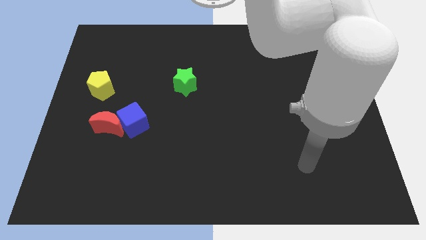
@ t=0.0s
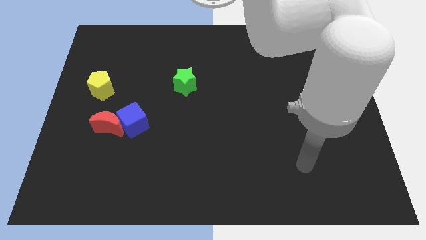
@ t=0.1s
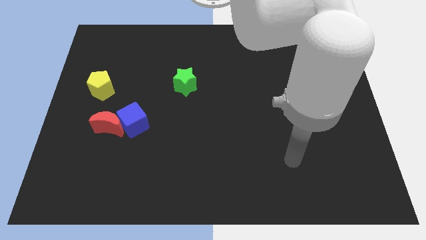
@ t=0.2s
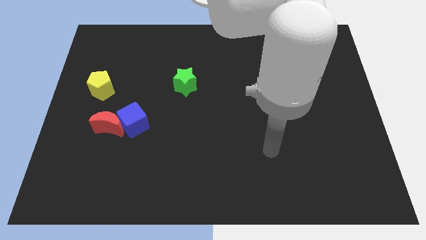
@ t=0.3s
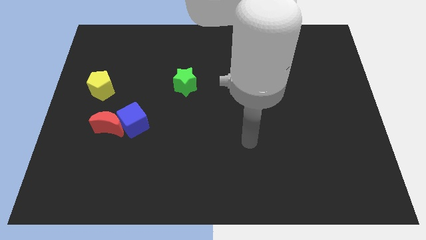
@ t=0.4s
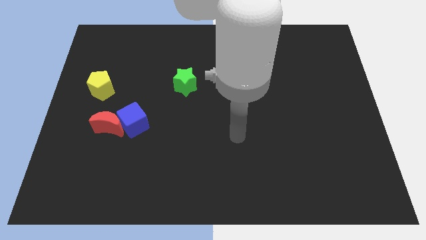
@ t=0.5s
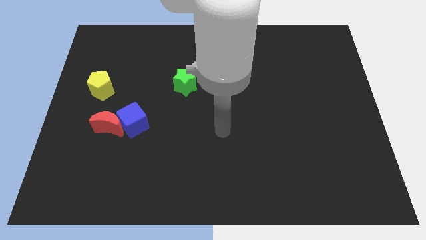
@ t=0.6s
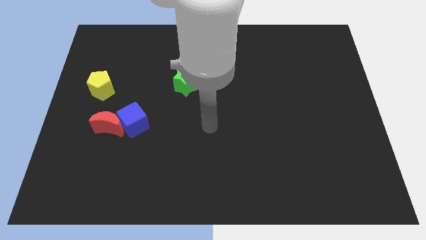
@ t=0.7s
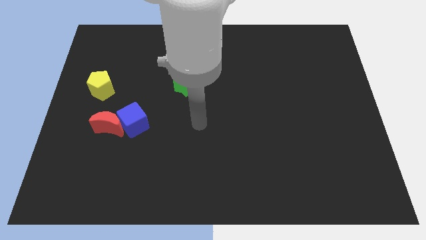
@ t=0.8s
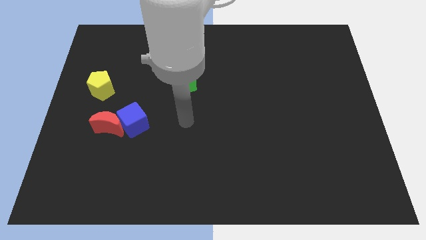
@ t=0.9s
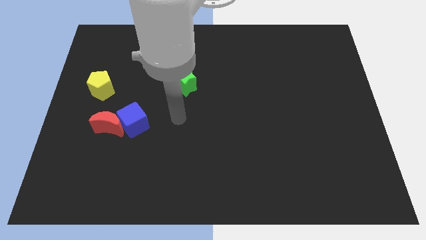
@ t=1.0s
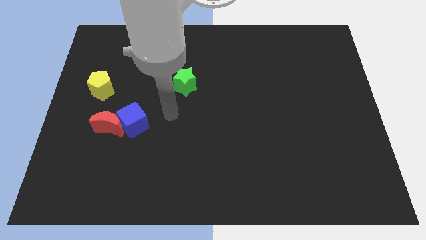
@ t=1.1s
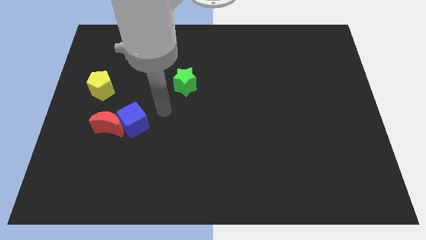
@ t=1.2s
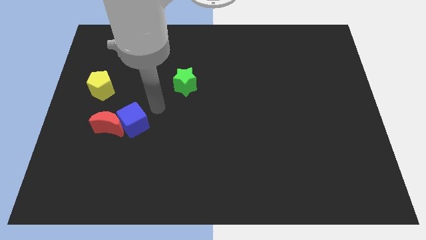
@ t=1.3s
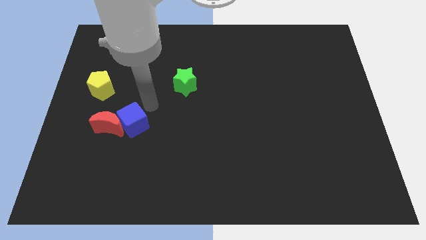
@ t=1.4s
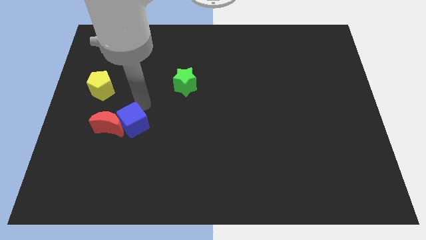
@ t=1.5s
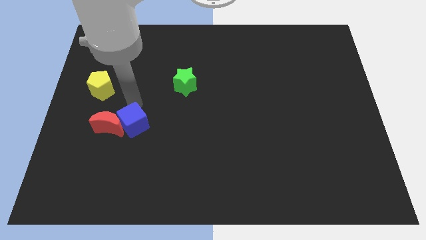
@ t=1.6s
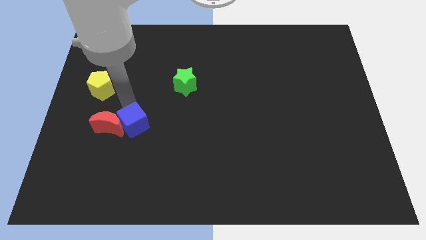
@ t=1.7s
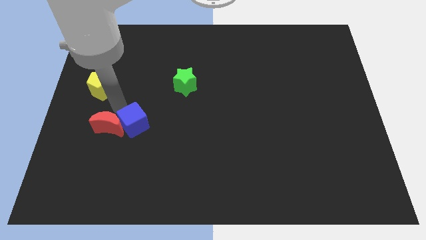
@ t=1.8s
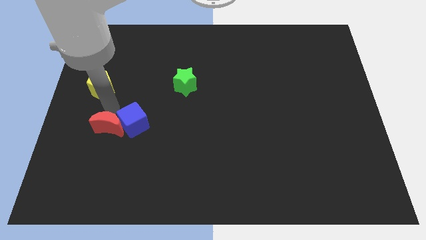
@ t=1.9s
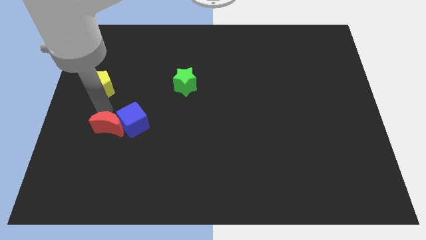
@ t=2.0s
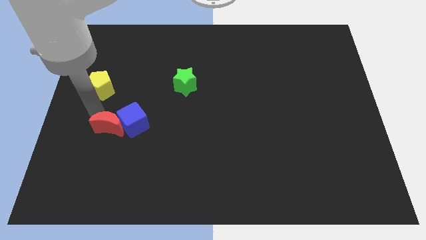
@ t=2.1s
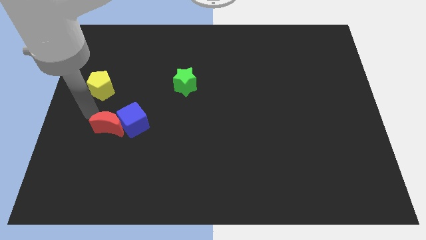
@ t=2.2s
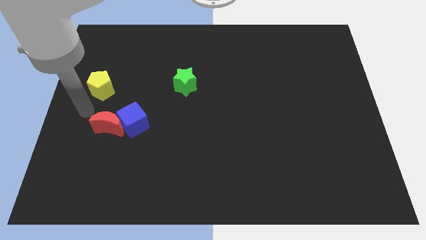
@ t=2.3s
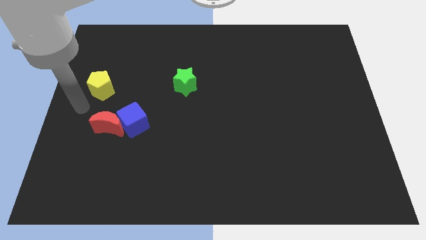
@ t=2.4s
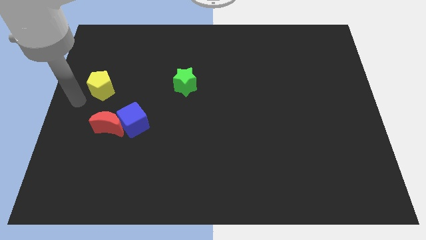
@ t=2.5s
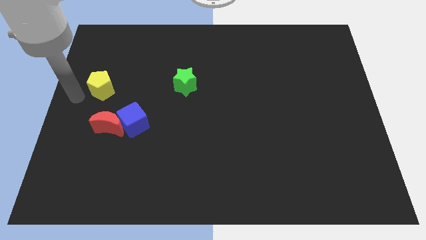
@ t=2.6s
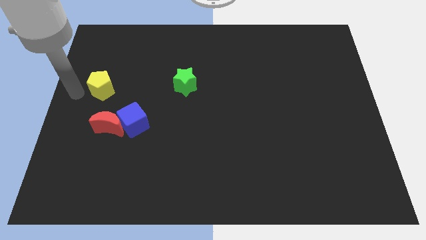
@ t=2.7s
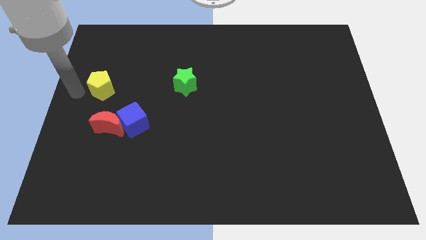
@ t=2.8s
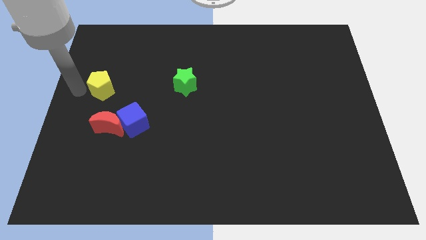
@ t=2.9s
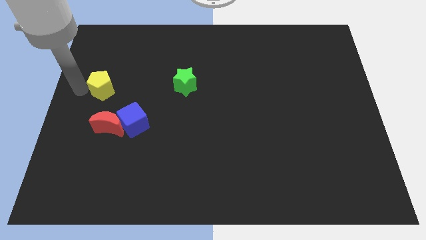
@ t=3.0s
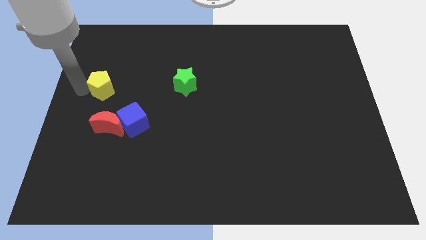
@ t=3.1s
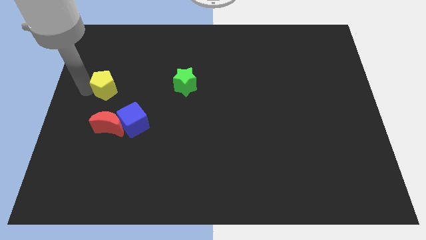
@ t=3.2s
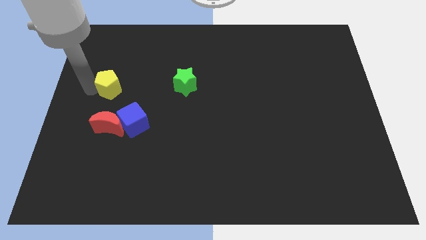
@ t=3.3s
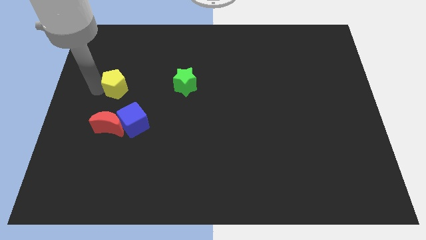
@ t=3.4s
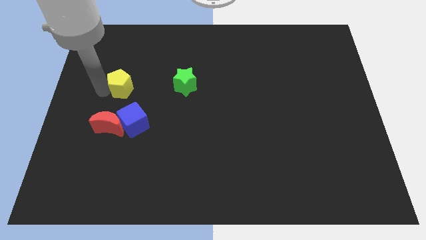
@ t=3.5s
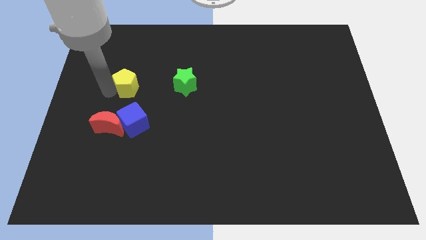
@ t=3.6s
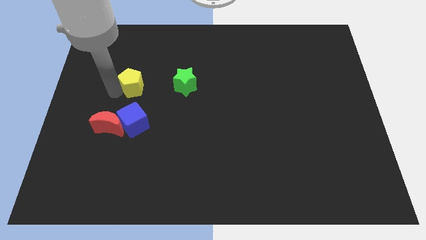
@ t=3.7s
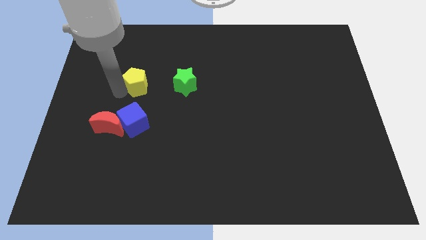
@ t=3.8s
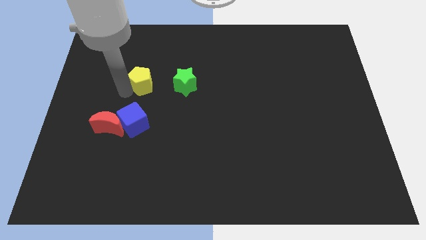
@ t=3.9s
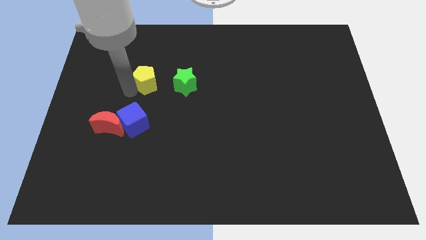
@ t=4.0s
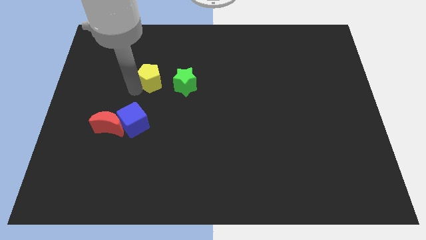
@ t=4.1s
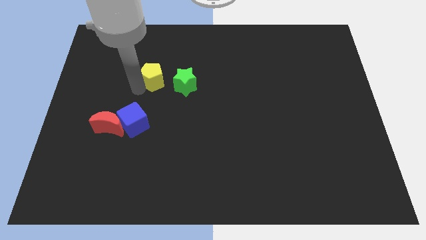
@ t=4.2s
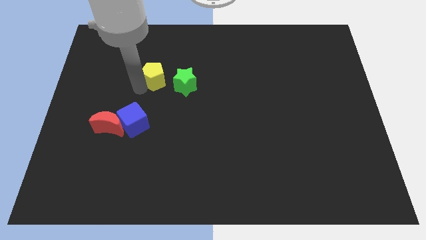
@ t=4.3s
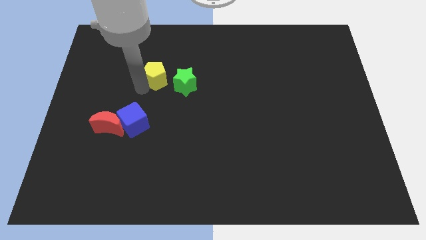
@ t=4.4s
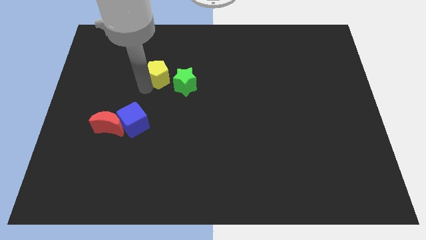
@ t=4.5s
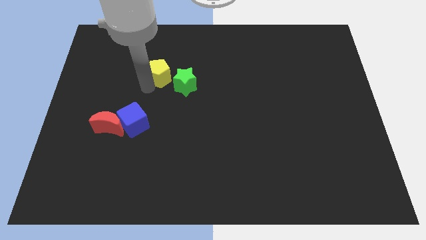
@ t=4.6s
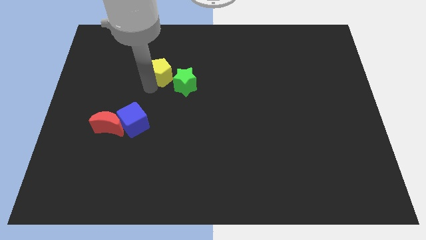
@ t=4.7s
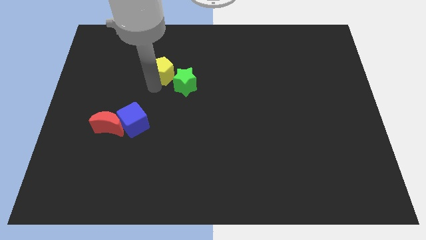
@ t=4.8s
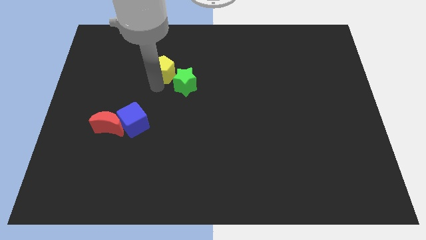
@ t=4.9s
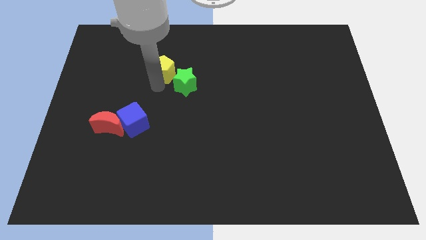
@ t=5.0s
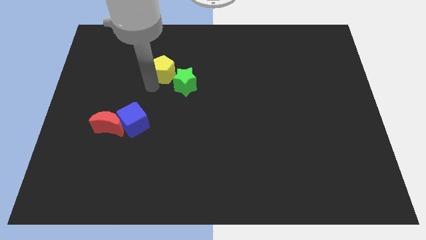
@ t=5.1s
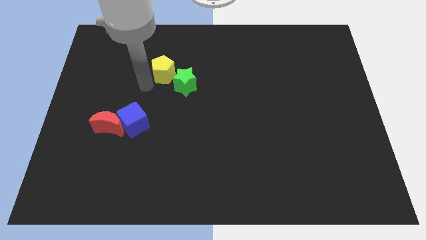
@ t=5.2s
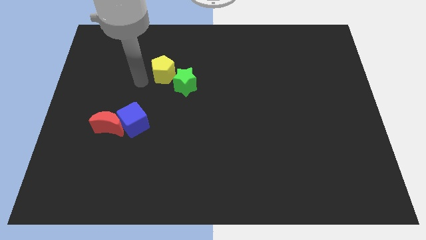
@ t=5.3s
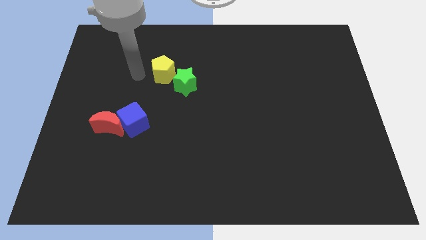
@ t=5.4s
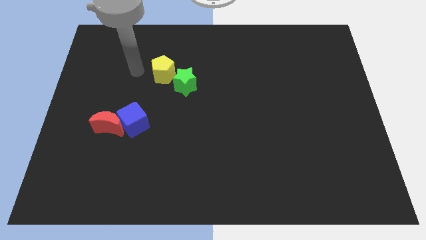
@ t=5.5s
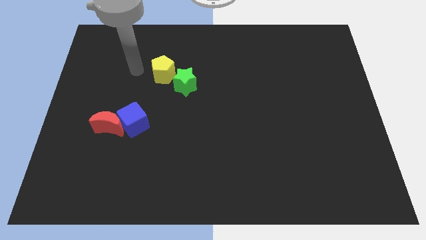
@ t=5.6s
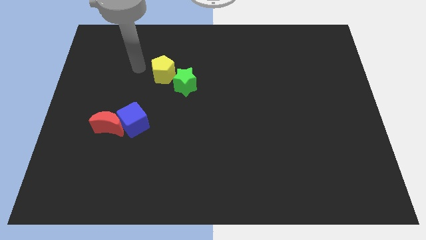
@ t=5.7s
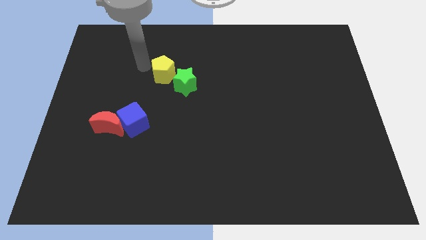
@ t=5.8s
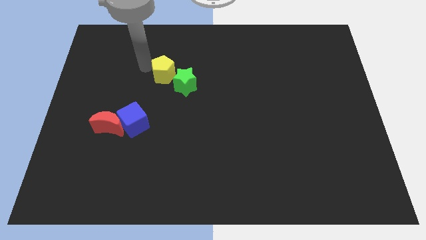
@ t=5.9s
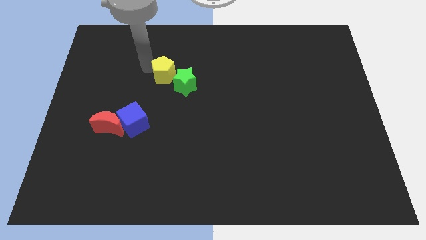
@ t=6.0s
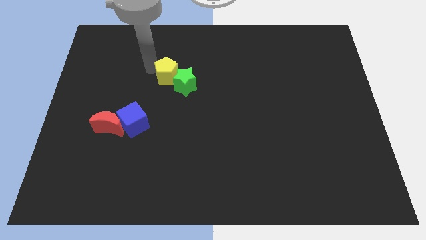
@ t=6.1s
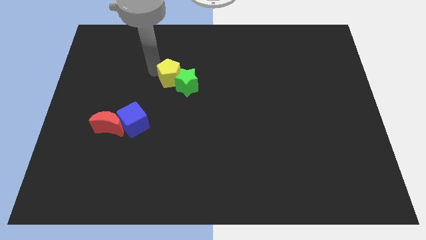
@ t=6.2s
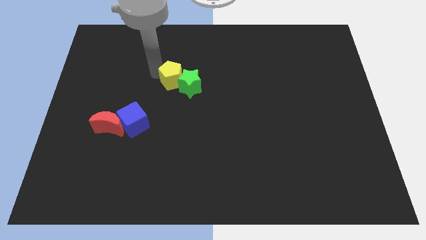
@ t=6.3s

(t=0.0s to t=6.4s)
slide the pentagon next to the star

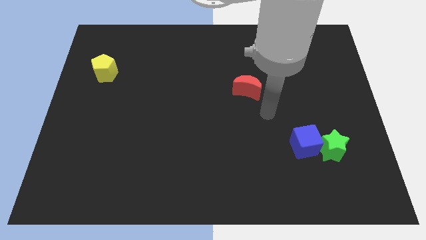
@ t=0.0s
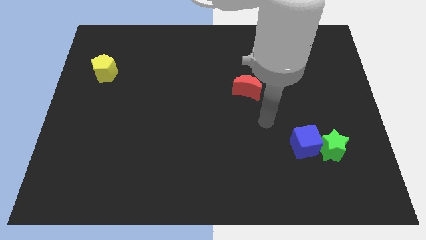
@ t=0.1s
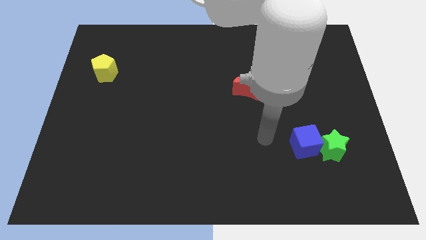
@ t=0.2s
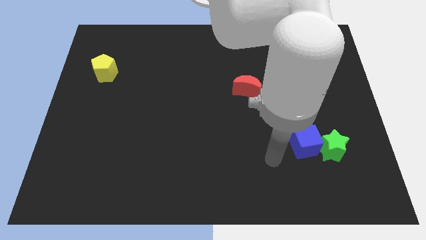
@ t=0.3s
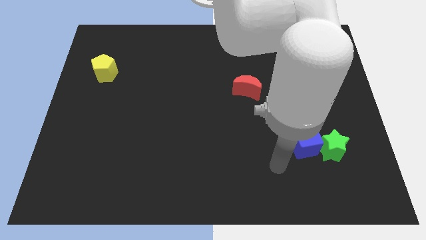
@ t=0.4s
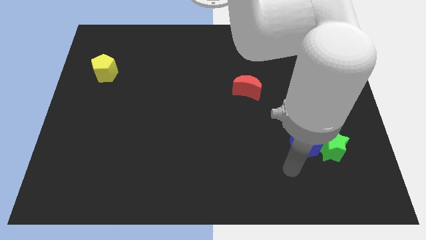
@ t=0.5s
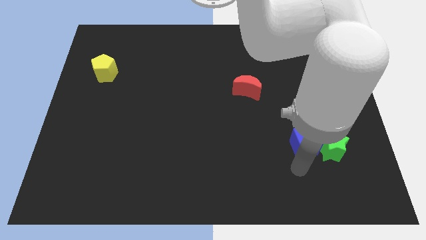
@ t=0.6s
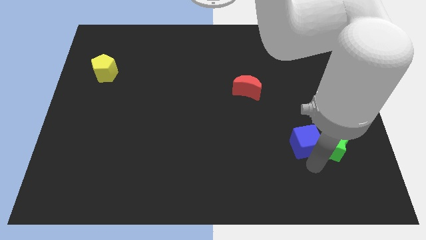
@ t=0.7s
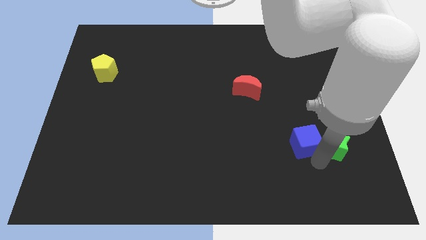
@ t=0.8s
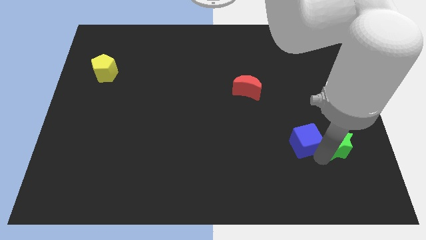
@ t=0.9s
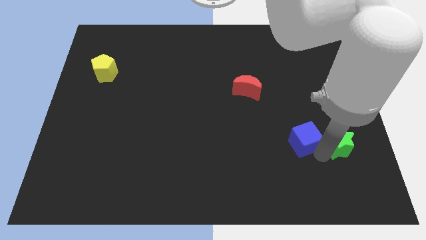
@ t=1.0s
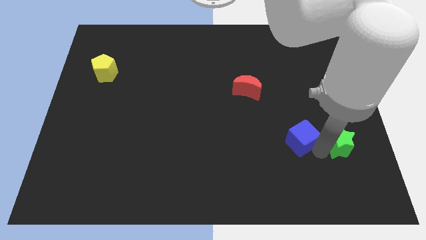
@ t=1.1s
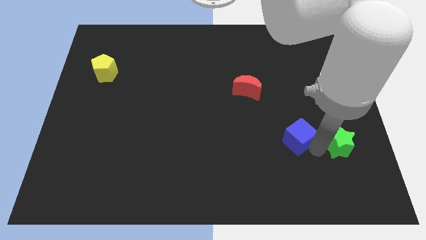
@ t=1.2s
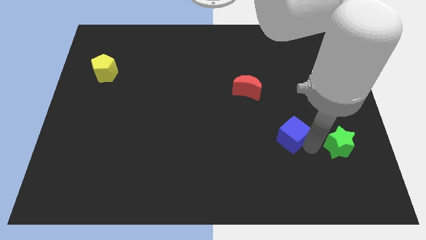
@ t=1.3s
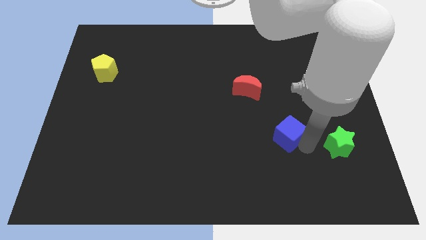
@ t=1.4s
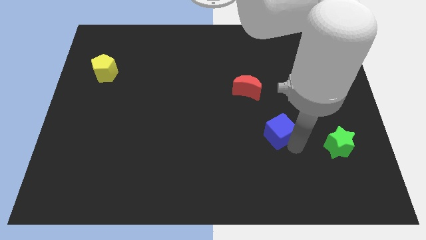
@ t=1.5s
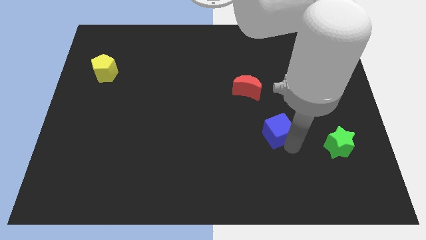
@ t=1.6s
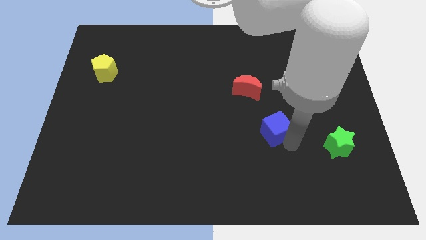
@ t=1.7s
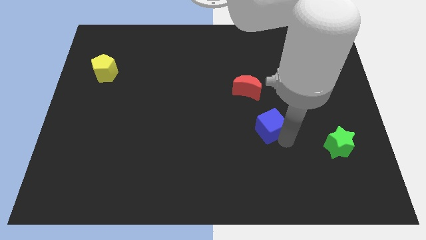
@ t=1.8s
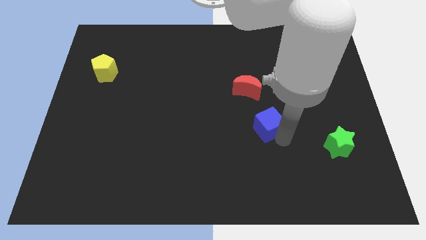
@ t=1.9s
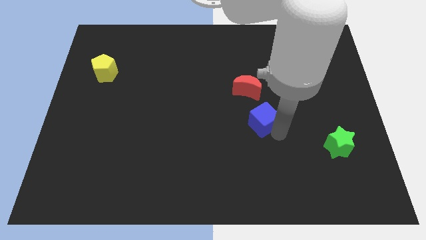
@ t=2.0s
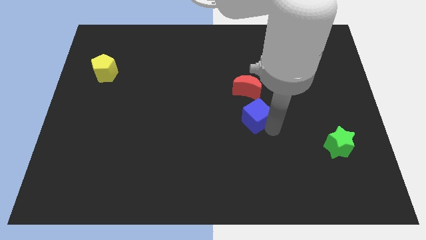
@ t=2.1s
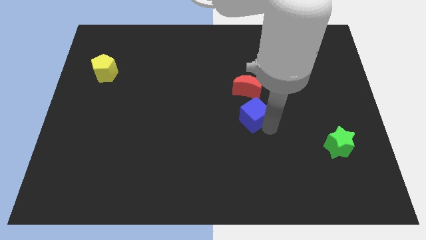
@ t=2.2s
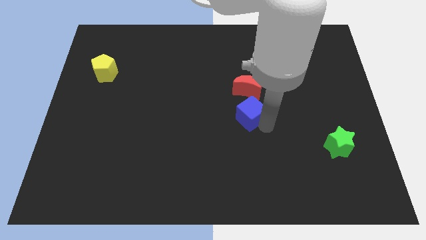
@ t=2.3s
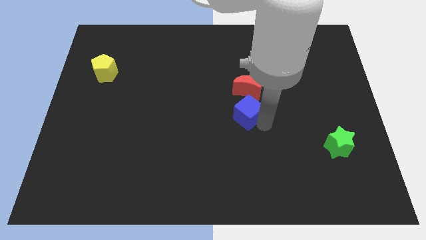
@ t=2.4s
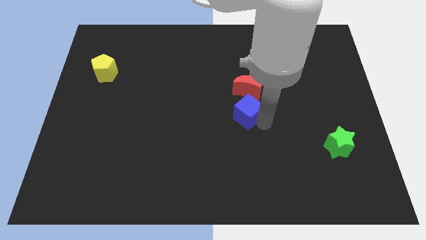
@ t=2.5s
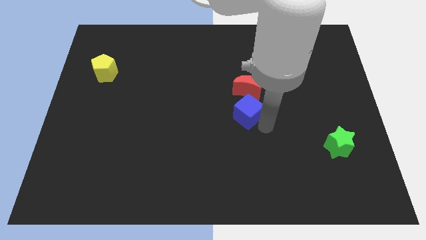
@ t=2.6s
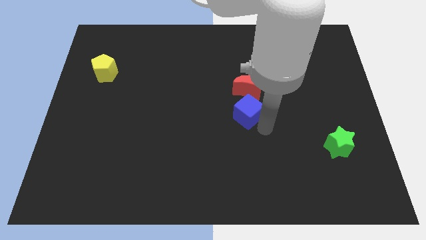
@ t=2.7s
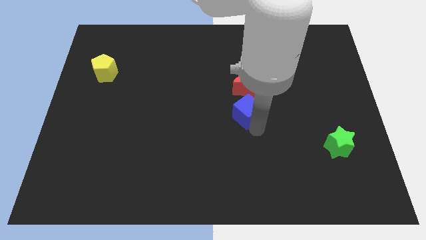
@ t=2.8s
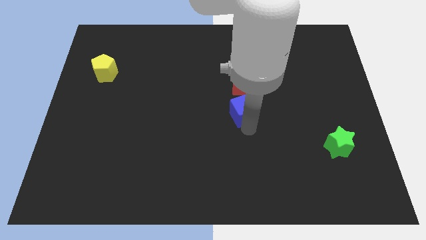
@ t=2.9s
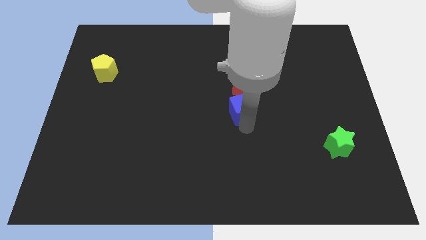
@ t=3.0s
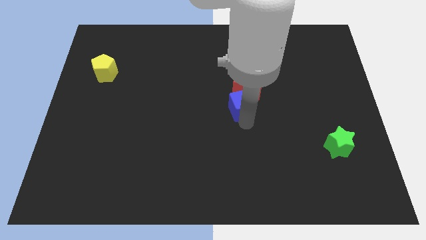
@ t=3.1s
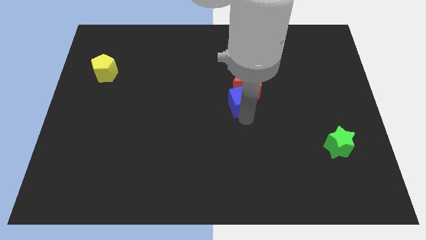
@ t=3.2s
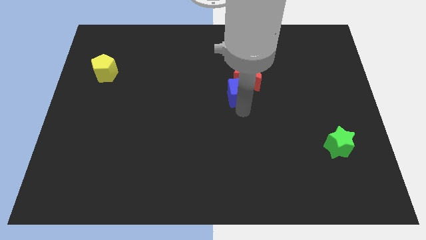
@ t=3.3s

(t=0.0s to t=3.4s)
move the blue block close to the moon
